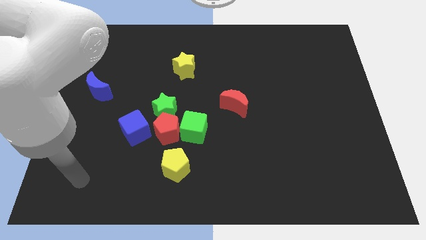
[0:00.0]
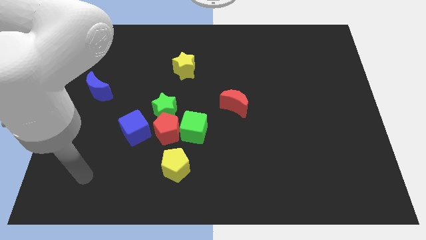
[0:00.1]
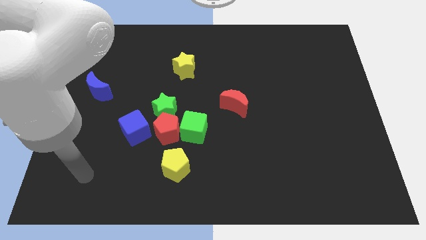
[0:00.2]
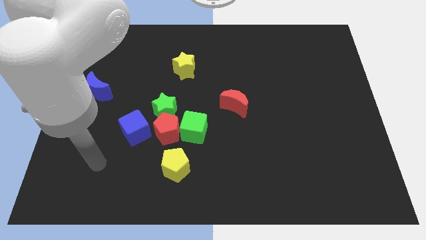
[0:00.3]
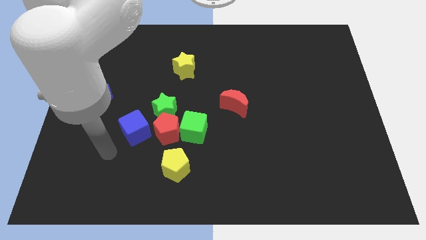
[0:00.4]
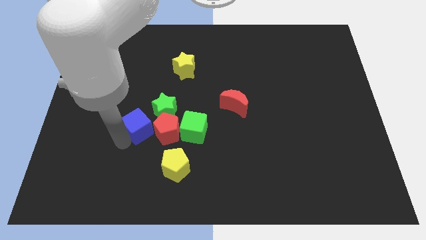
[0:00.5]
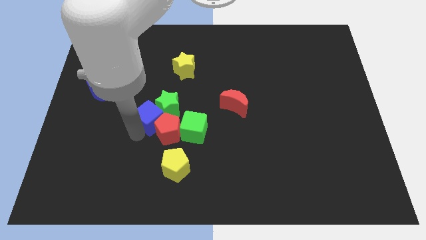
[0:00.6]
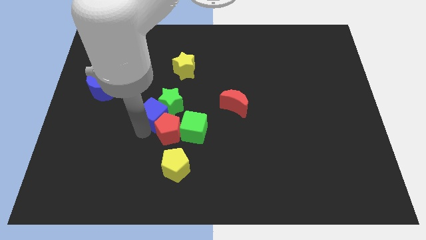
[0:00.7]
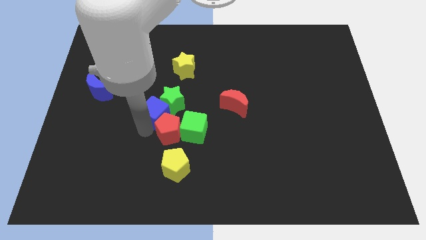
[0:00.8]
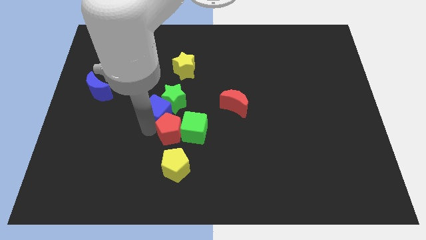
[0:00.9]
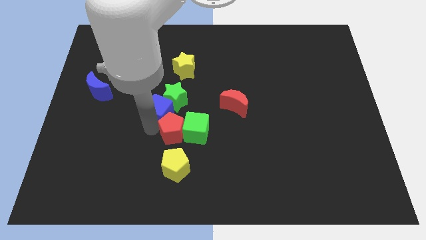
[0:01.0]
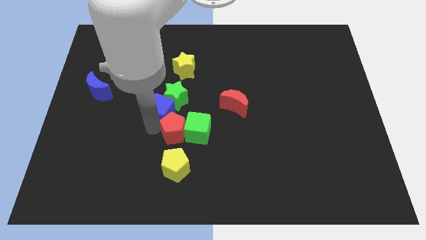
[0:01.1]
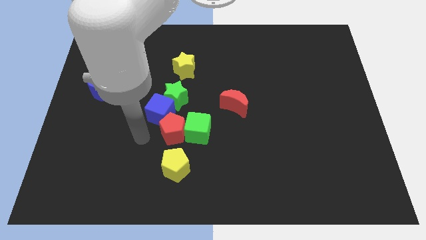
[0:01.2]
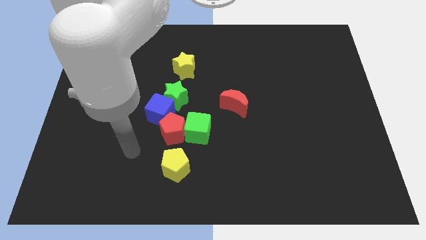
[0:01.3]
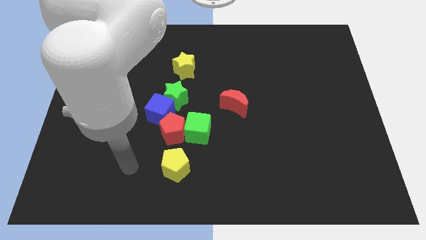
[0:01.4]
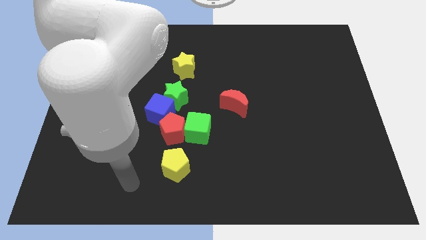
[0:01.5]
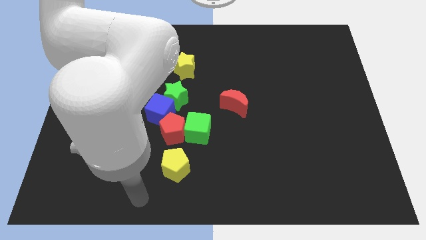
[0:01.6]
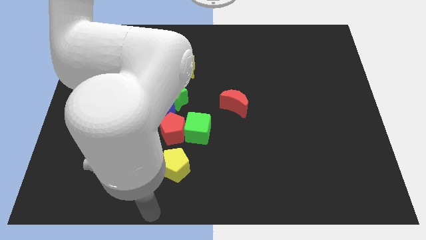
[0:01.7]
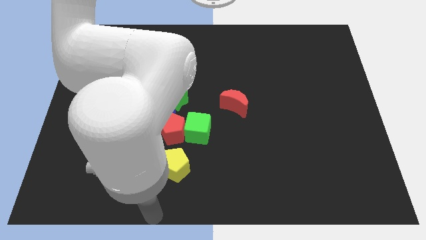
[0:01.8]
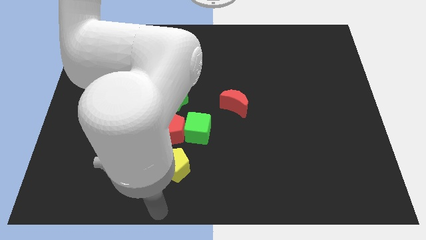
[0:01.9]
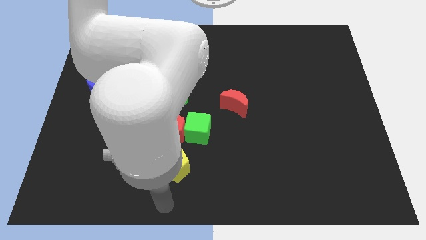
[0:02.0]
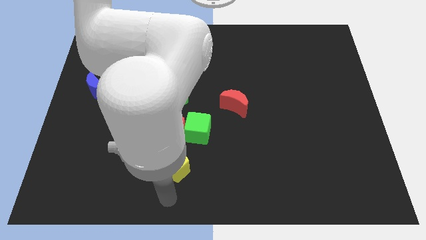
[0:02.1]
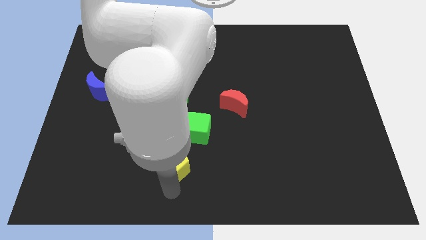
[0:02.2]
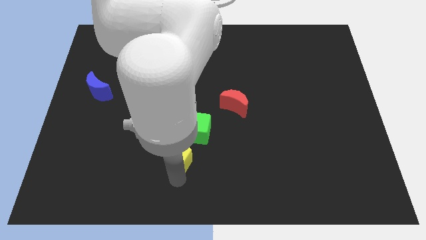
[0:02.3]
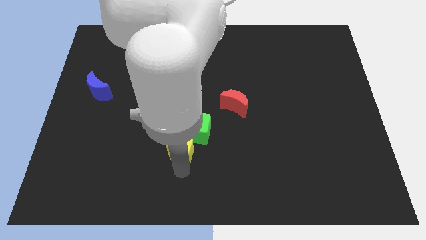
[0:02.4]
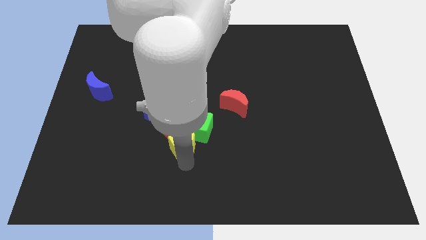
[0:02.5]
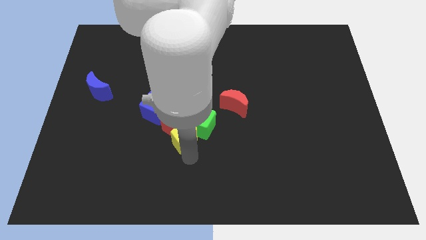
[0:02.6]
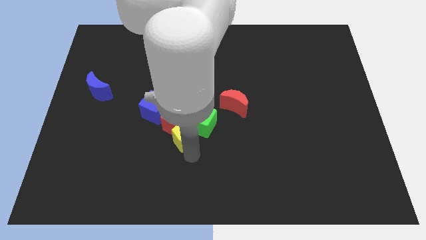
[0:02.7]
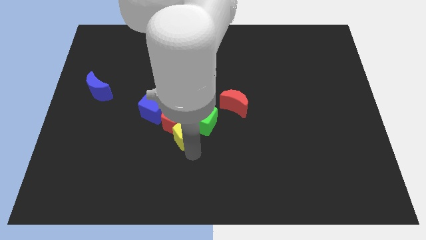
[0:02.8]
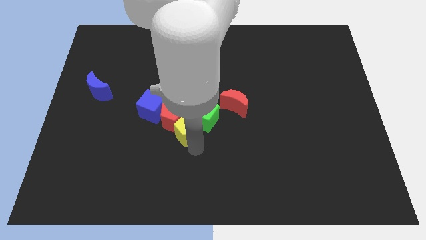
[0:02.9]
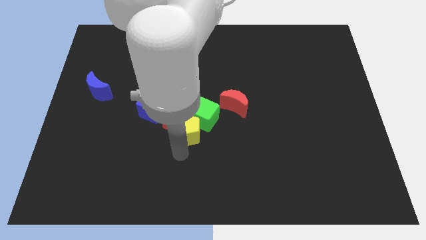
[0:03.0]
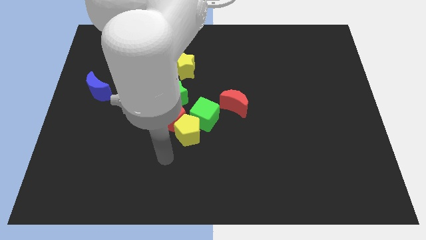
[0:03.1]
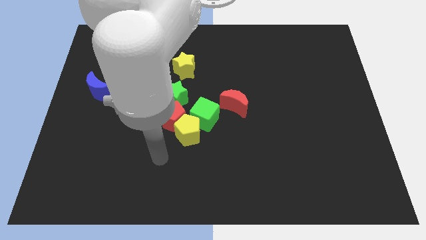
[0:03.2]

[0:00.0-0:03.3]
push the yellow pentagon into the group of blocks

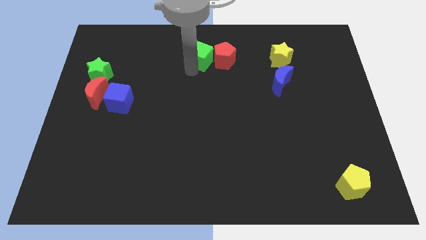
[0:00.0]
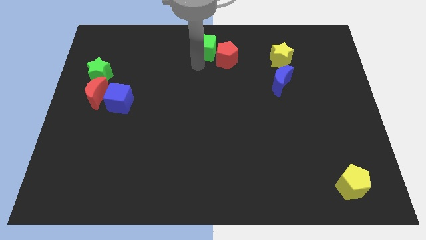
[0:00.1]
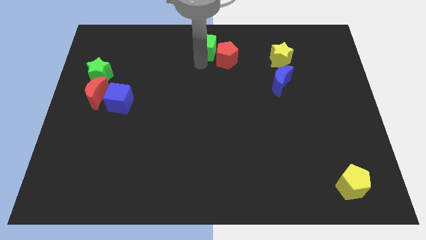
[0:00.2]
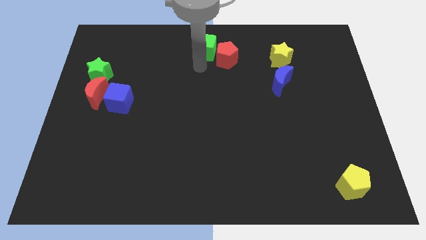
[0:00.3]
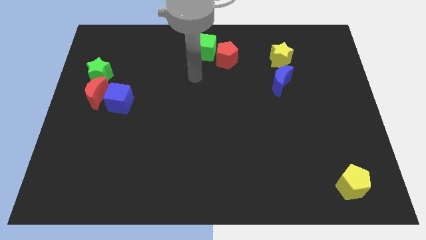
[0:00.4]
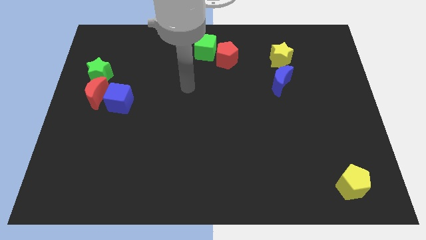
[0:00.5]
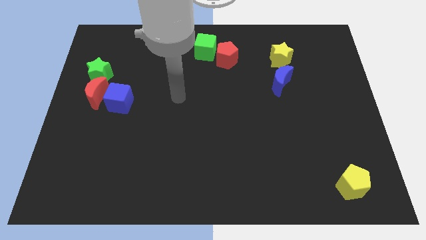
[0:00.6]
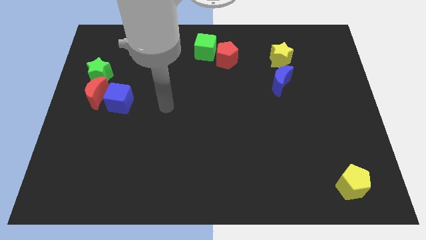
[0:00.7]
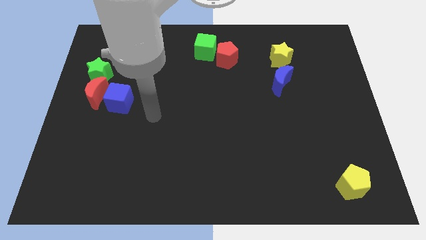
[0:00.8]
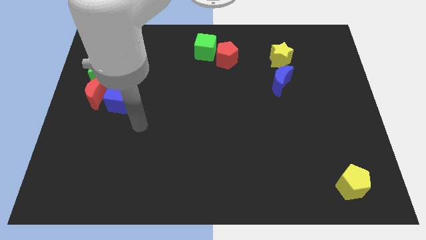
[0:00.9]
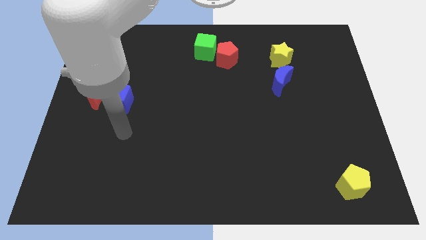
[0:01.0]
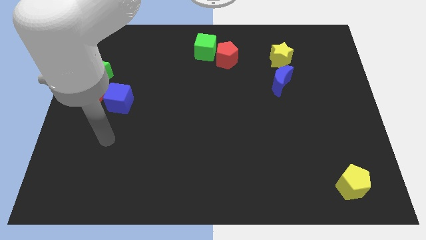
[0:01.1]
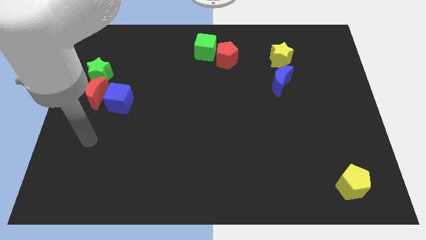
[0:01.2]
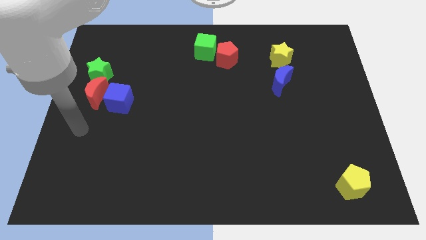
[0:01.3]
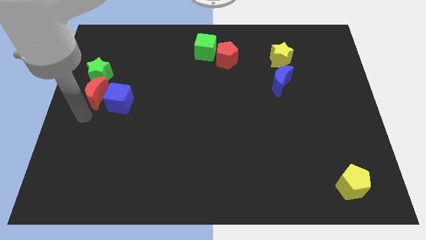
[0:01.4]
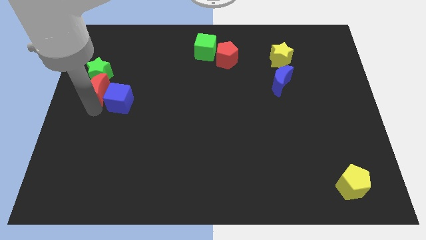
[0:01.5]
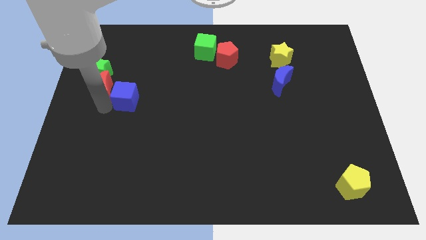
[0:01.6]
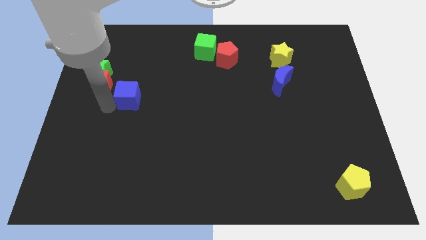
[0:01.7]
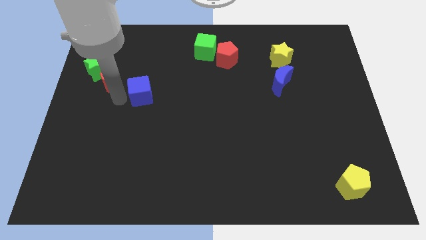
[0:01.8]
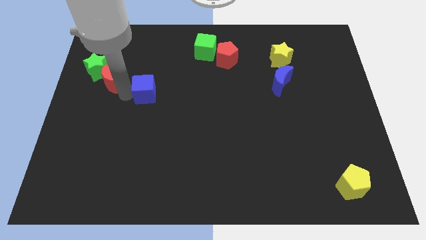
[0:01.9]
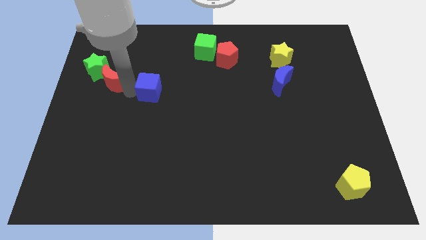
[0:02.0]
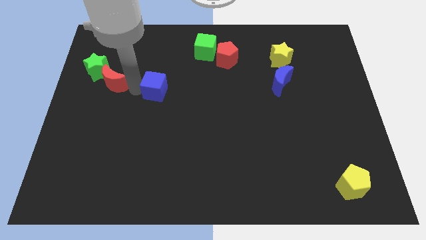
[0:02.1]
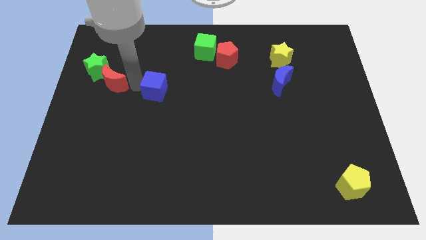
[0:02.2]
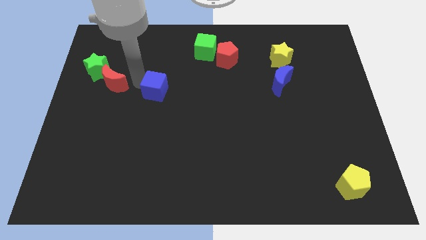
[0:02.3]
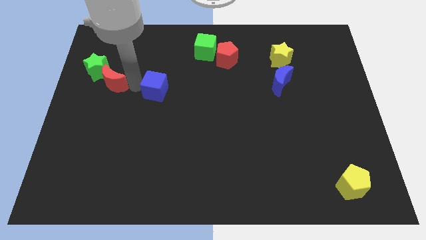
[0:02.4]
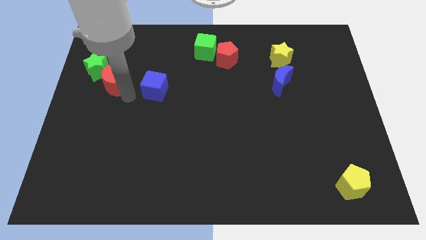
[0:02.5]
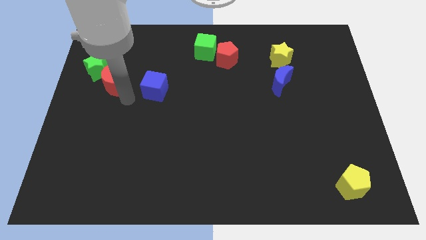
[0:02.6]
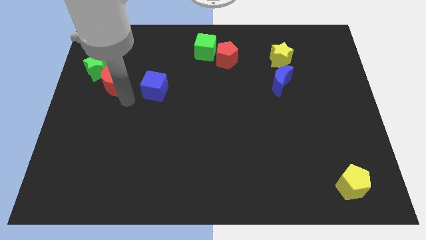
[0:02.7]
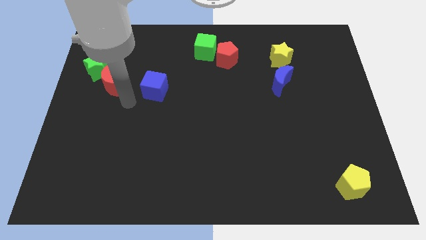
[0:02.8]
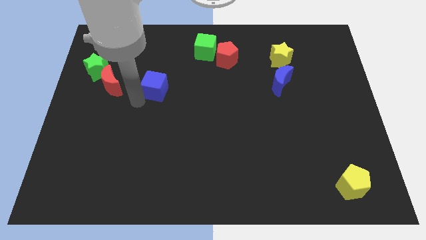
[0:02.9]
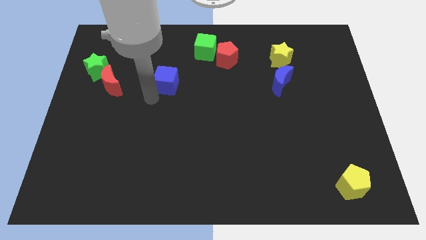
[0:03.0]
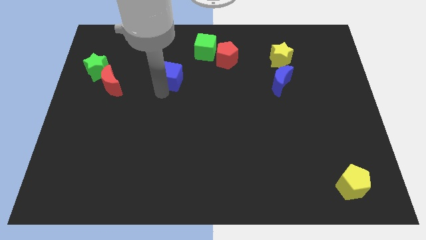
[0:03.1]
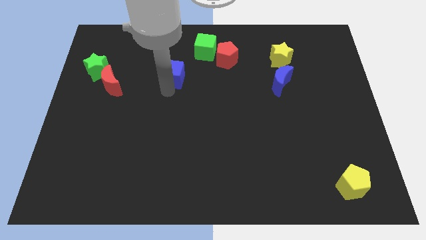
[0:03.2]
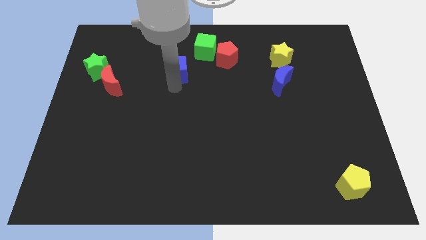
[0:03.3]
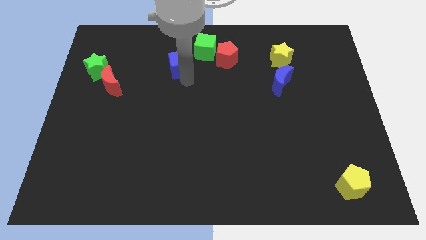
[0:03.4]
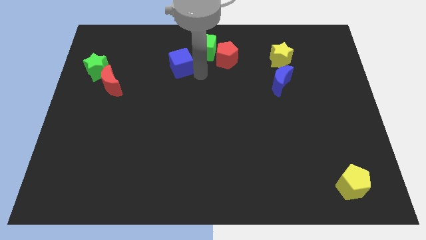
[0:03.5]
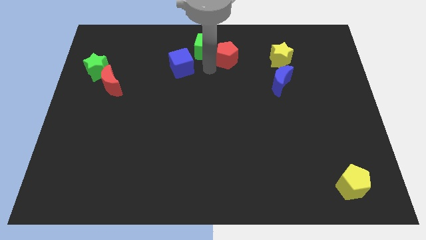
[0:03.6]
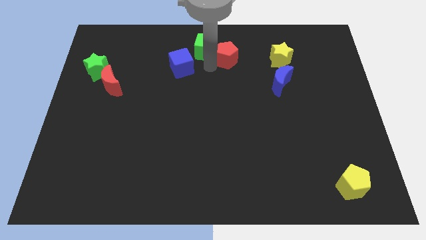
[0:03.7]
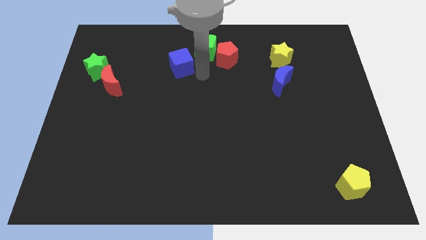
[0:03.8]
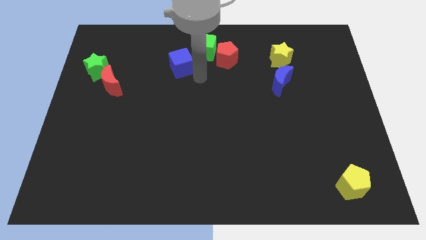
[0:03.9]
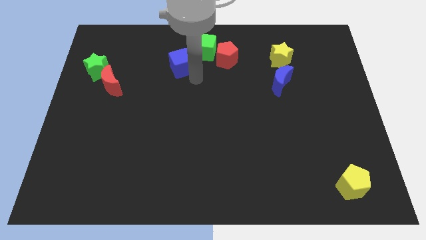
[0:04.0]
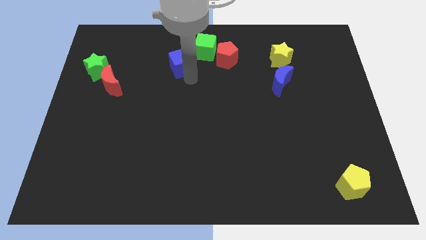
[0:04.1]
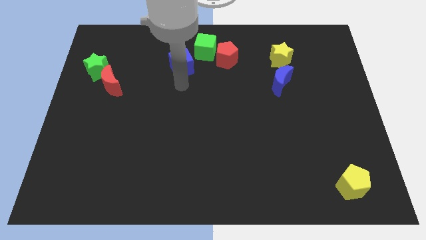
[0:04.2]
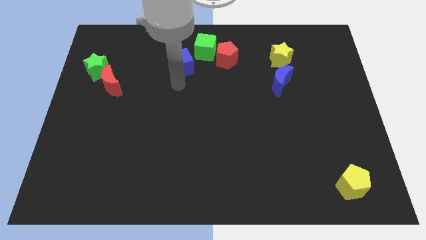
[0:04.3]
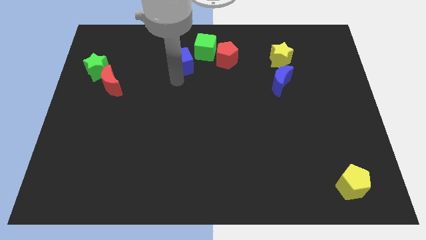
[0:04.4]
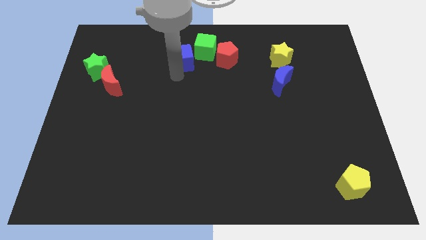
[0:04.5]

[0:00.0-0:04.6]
move the blue cube towards the green cube

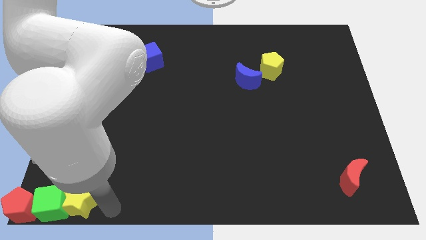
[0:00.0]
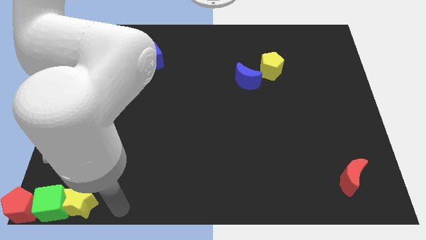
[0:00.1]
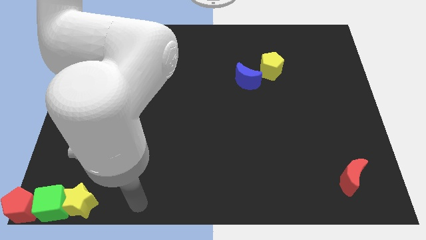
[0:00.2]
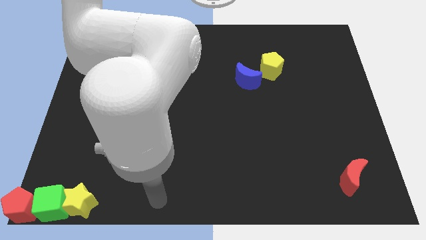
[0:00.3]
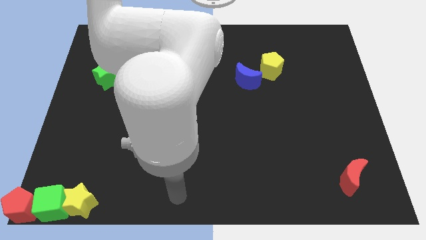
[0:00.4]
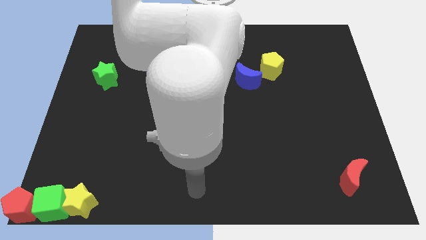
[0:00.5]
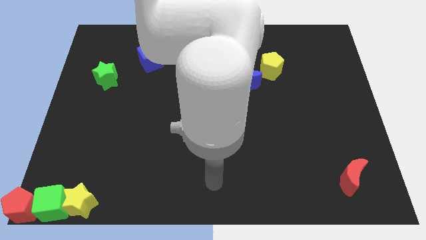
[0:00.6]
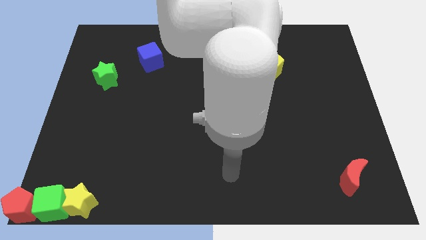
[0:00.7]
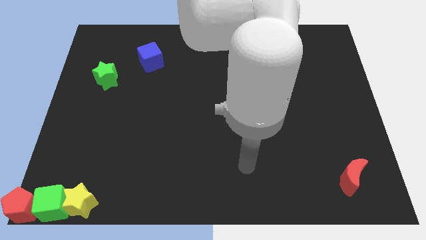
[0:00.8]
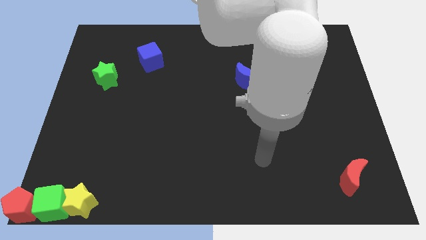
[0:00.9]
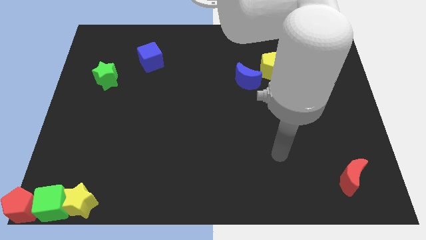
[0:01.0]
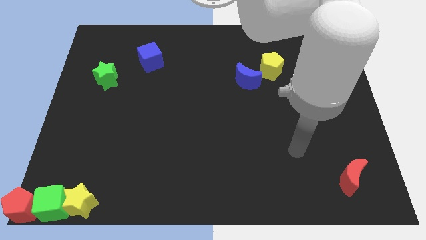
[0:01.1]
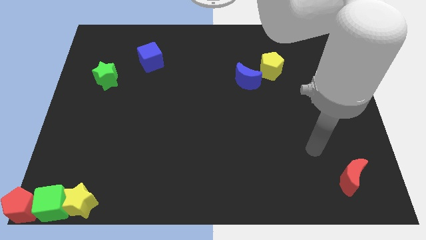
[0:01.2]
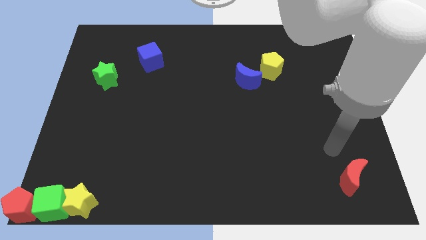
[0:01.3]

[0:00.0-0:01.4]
move your arm away from yellow star
